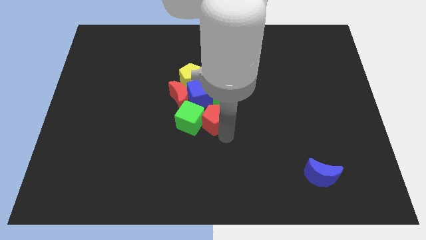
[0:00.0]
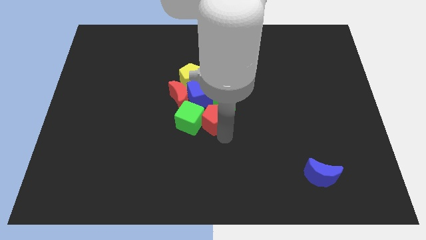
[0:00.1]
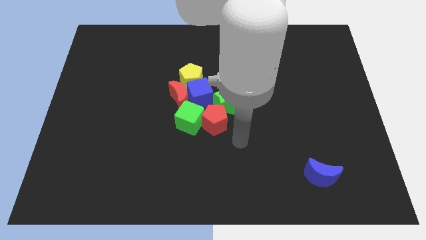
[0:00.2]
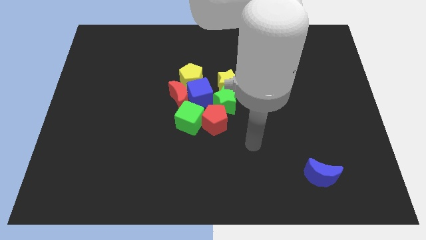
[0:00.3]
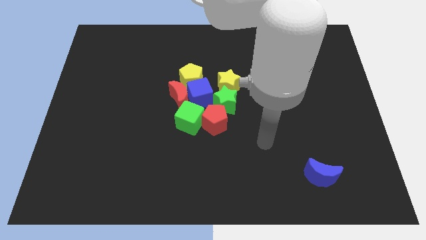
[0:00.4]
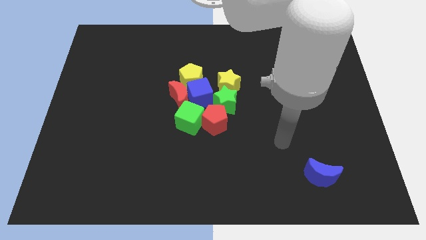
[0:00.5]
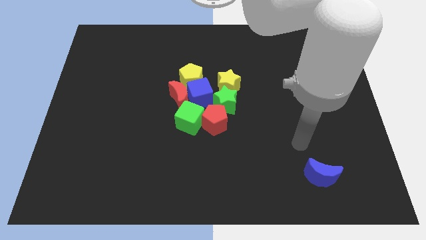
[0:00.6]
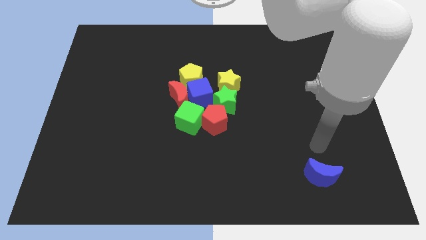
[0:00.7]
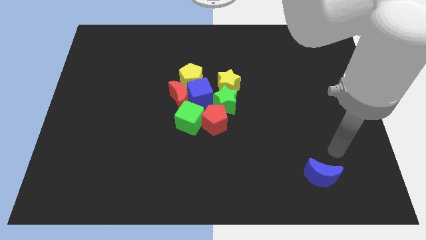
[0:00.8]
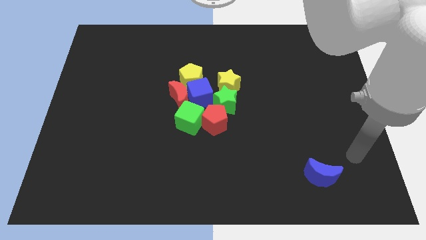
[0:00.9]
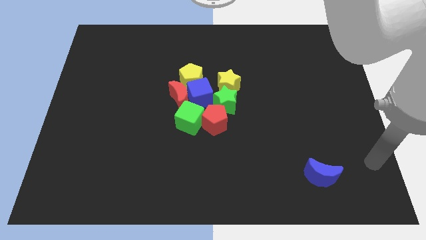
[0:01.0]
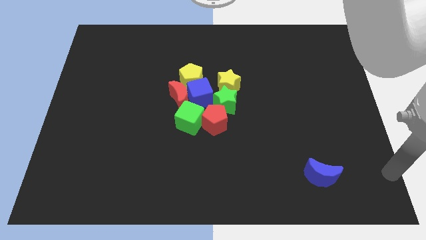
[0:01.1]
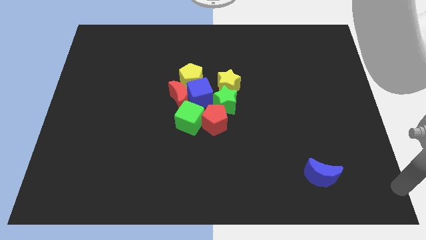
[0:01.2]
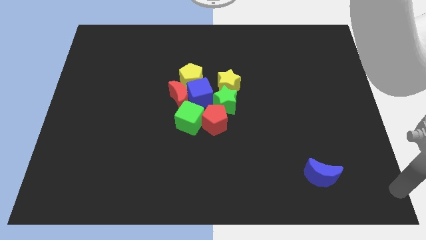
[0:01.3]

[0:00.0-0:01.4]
point your arm to the bottom right corner of the board

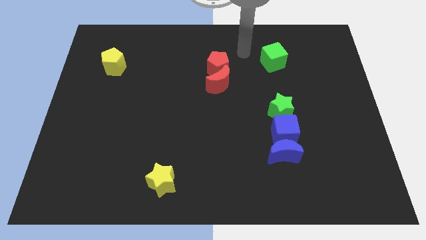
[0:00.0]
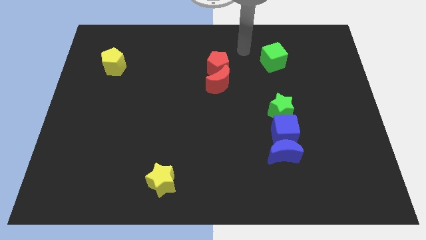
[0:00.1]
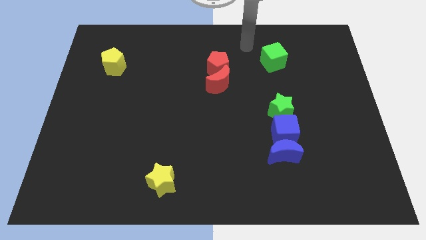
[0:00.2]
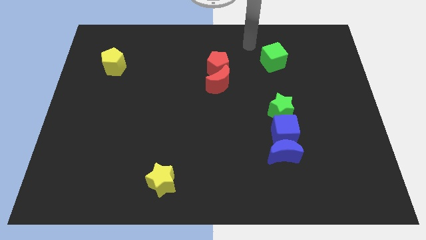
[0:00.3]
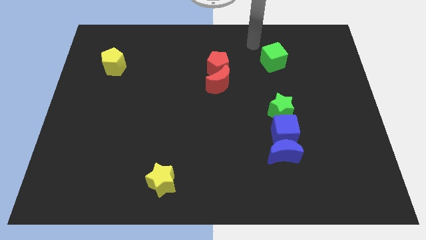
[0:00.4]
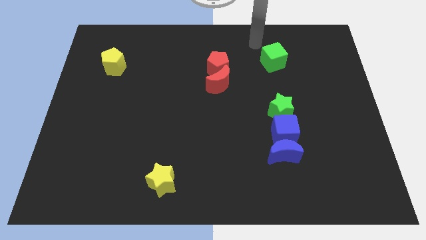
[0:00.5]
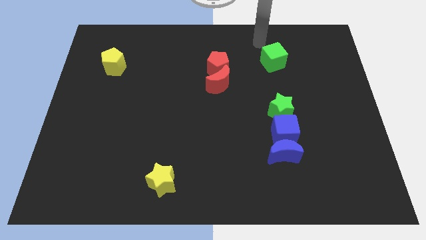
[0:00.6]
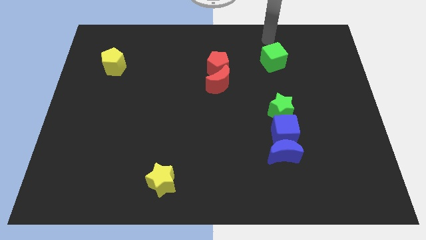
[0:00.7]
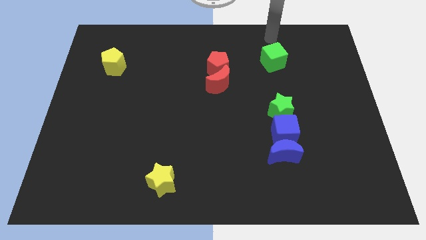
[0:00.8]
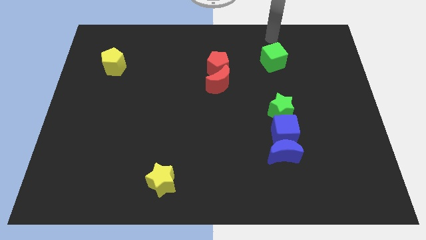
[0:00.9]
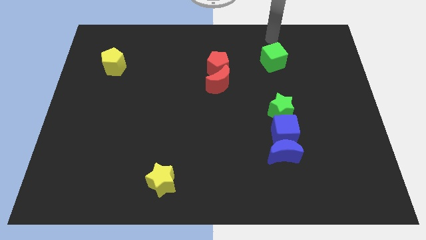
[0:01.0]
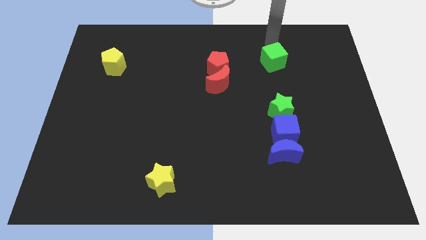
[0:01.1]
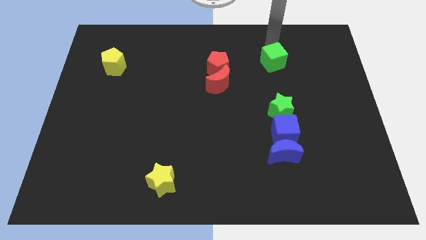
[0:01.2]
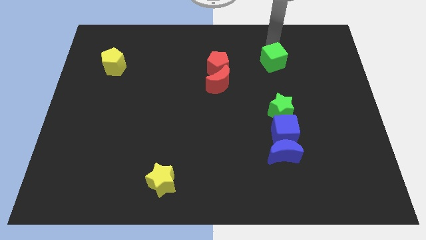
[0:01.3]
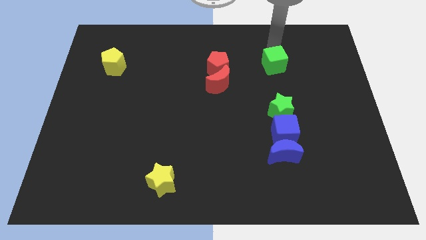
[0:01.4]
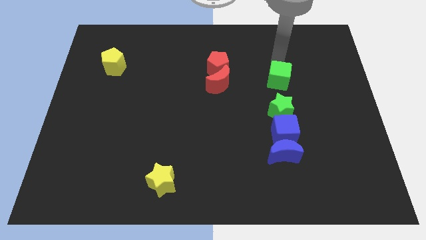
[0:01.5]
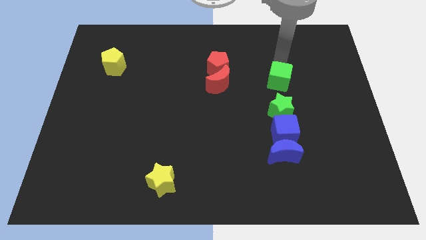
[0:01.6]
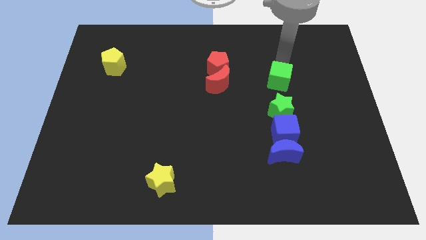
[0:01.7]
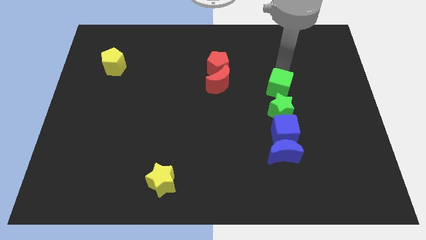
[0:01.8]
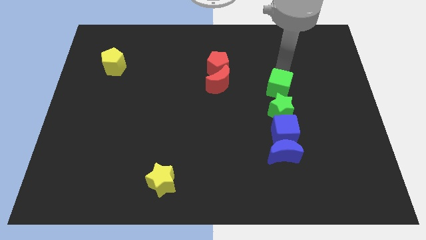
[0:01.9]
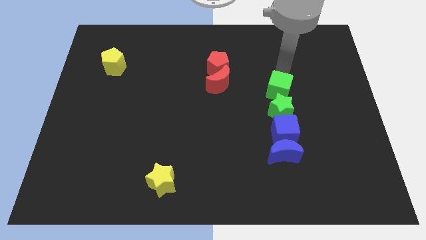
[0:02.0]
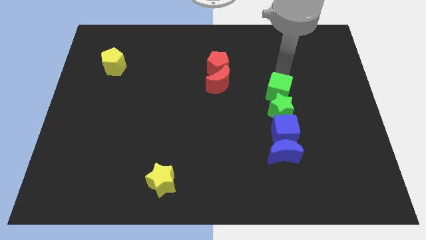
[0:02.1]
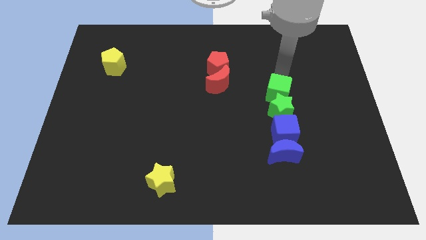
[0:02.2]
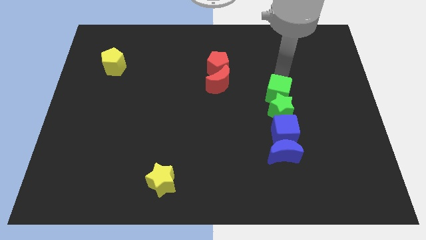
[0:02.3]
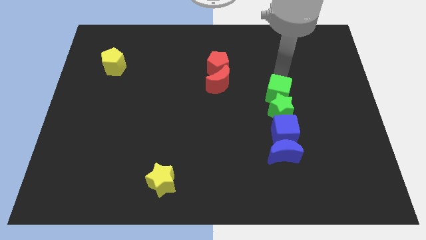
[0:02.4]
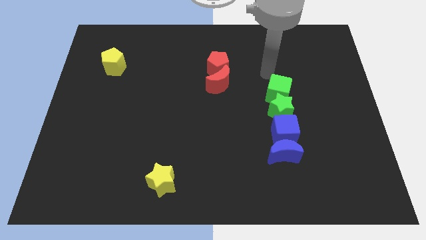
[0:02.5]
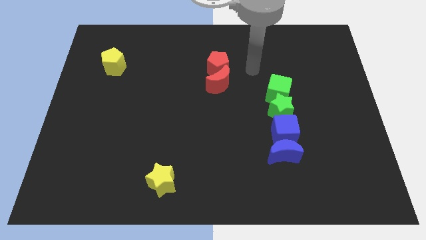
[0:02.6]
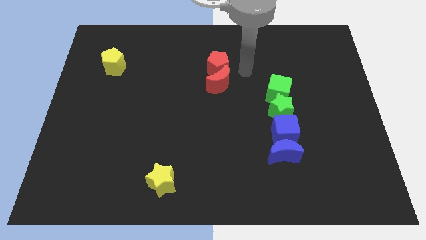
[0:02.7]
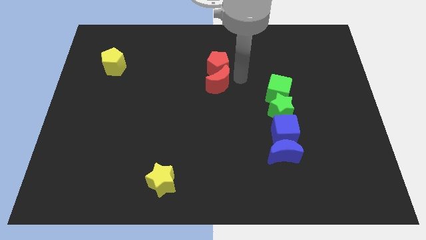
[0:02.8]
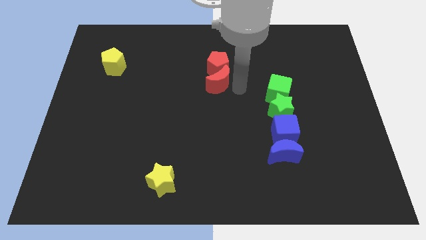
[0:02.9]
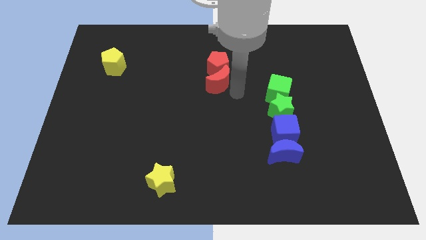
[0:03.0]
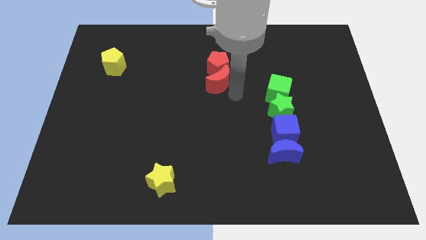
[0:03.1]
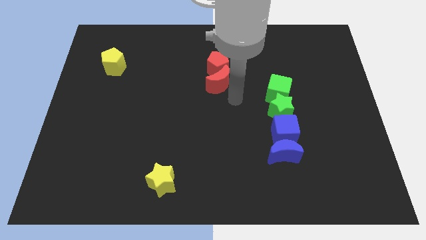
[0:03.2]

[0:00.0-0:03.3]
push the green cube at the top side of the green star

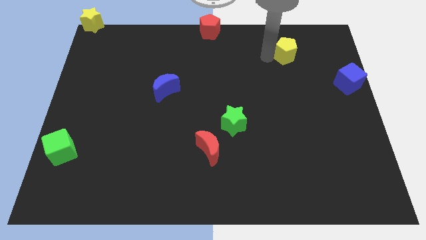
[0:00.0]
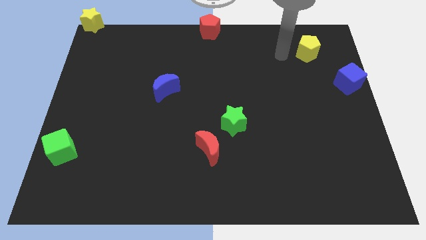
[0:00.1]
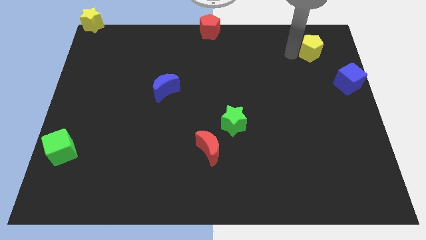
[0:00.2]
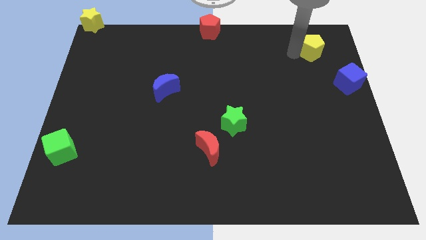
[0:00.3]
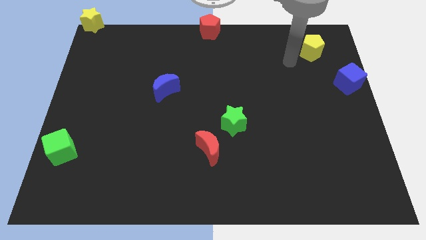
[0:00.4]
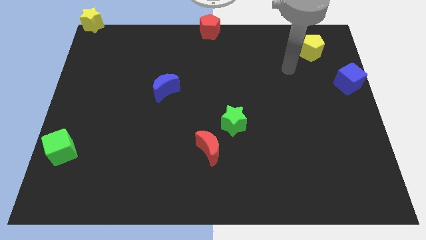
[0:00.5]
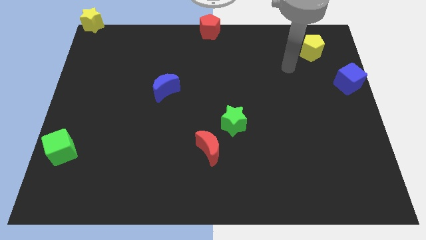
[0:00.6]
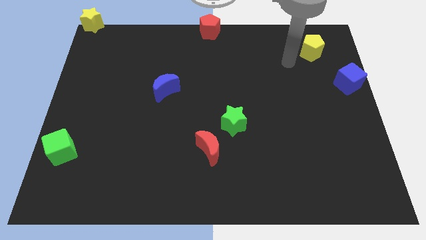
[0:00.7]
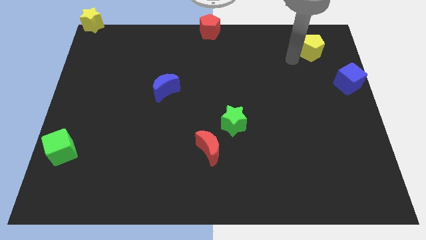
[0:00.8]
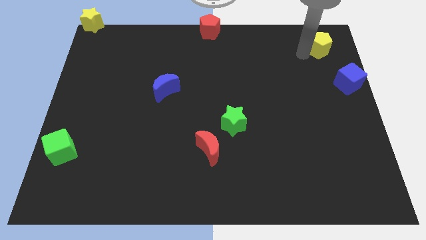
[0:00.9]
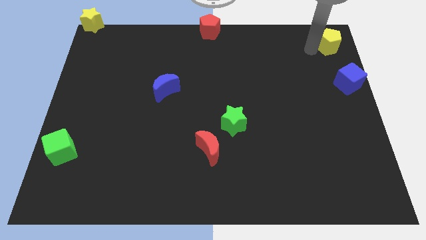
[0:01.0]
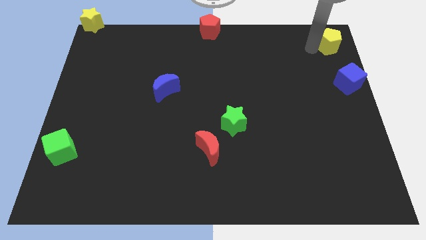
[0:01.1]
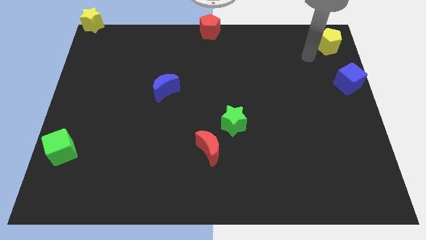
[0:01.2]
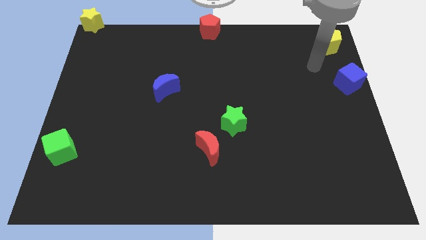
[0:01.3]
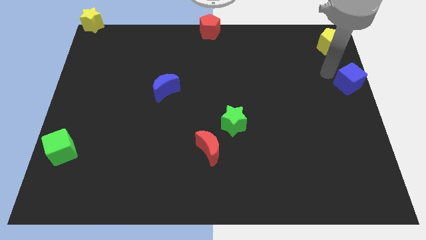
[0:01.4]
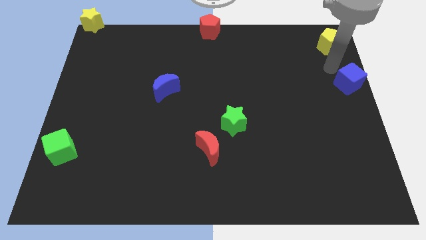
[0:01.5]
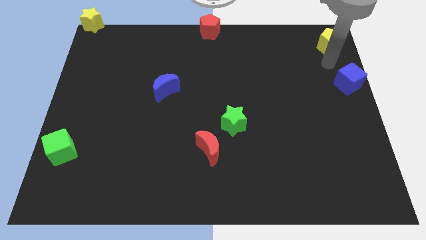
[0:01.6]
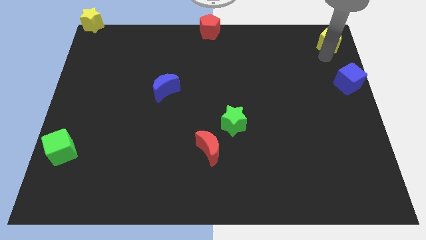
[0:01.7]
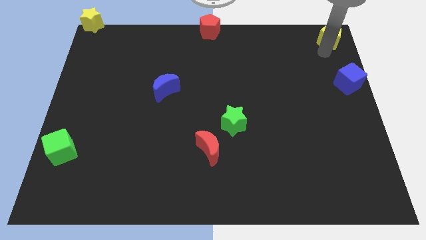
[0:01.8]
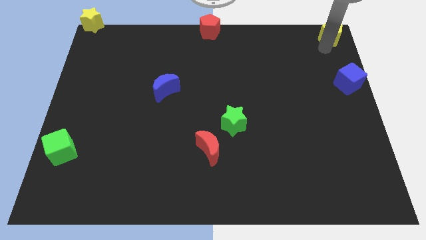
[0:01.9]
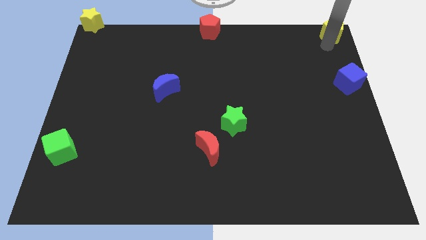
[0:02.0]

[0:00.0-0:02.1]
push yellow pentagon to the top right of the board

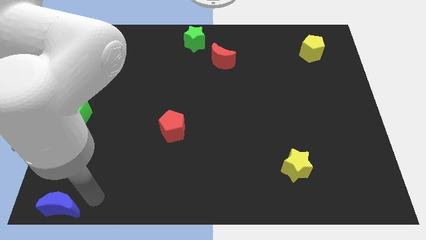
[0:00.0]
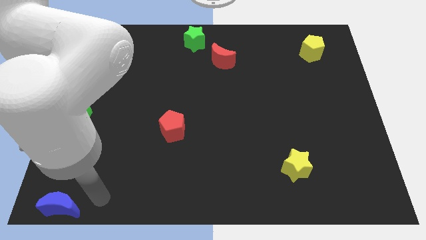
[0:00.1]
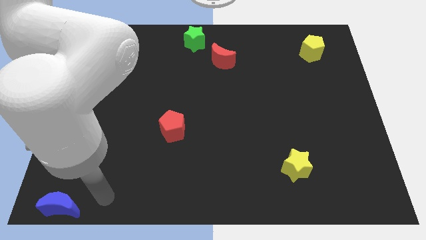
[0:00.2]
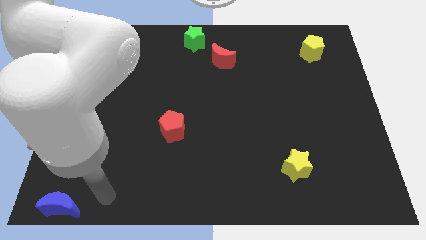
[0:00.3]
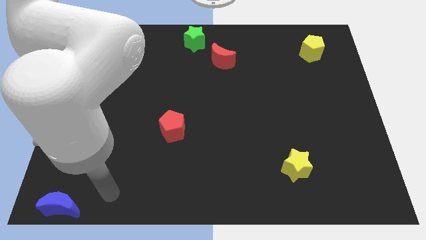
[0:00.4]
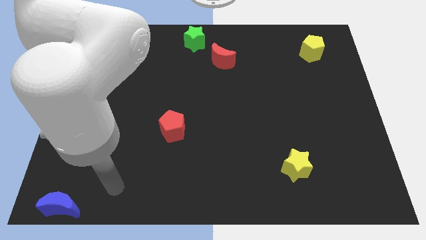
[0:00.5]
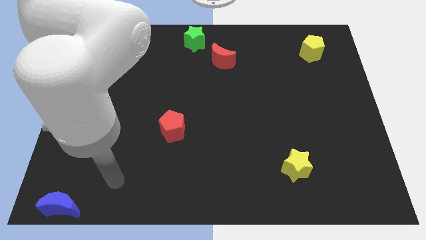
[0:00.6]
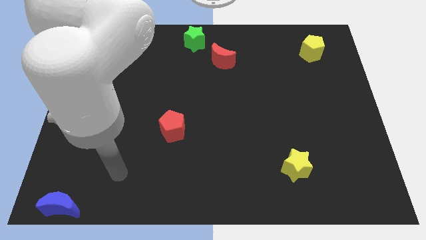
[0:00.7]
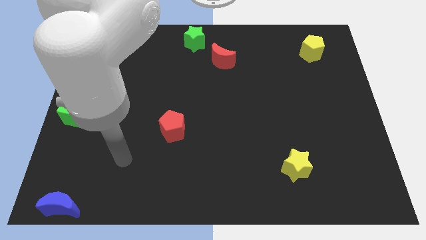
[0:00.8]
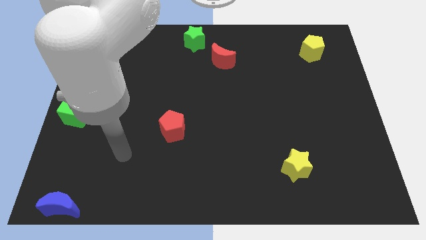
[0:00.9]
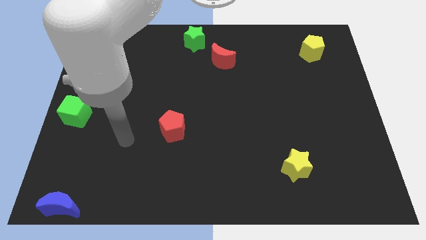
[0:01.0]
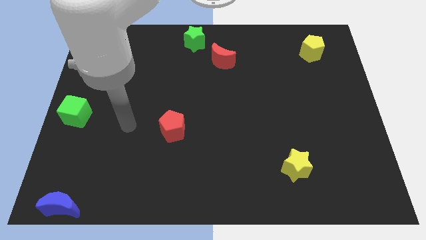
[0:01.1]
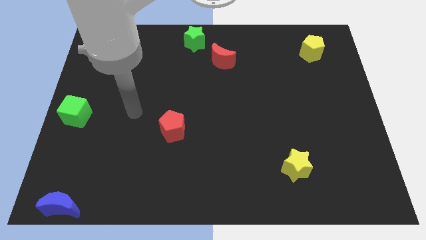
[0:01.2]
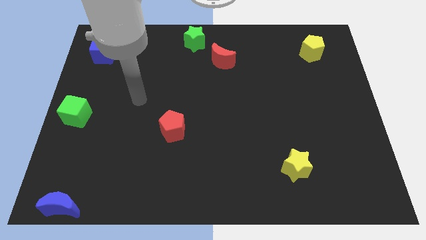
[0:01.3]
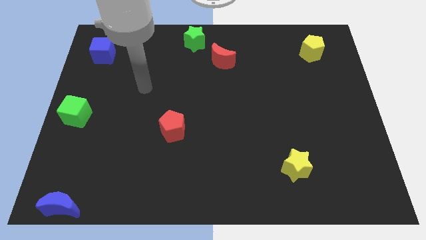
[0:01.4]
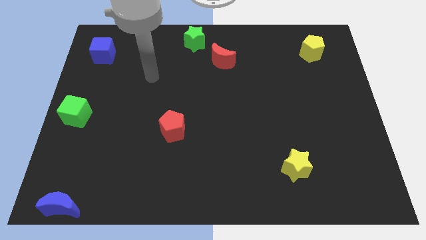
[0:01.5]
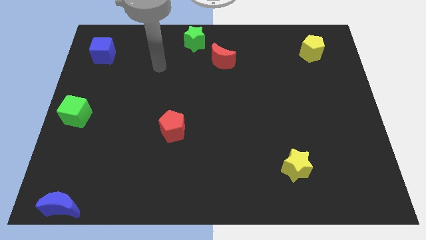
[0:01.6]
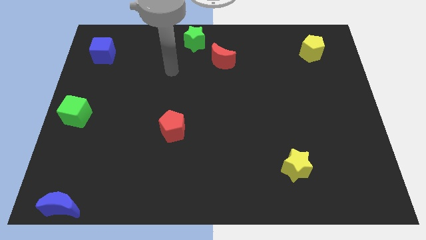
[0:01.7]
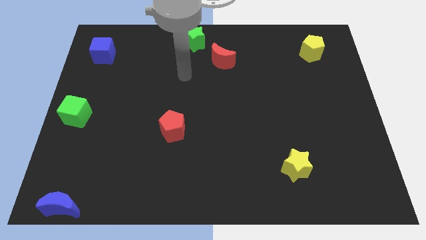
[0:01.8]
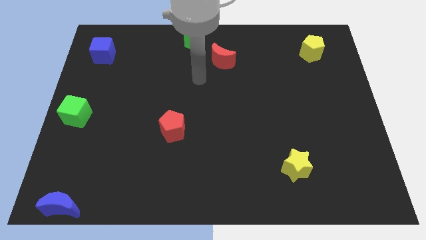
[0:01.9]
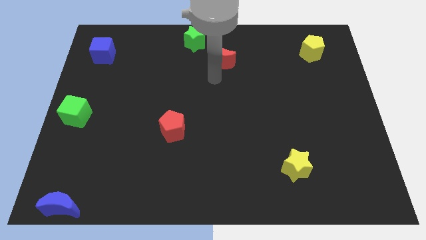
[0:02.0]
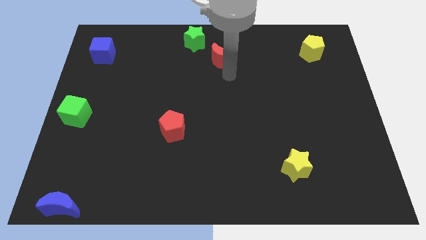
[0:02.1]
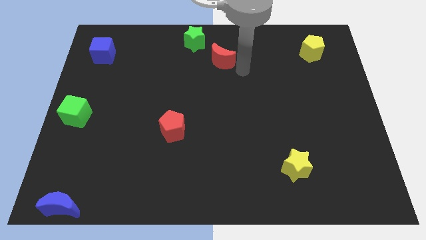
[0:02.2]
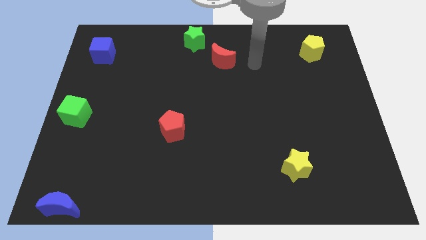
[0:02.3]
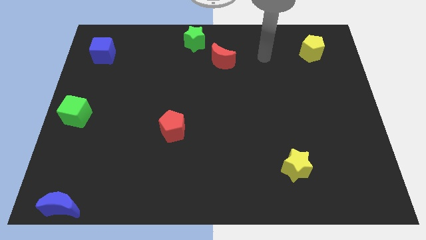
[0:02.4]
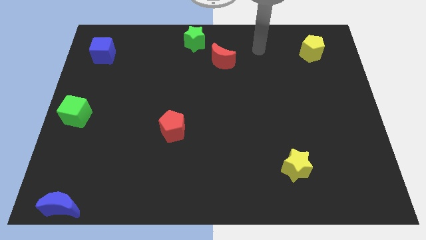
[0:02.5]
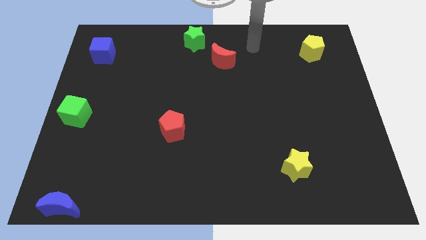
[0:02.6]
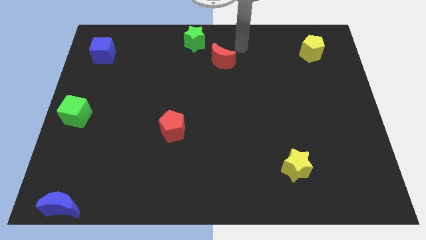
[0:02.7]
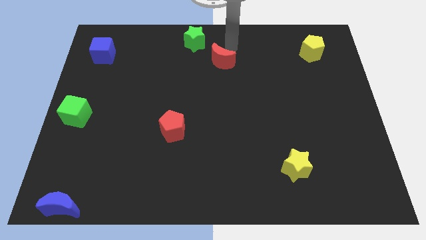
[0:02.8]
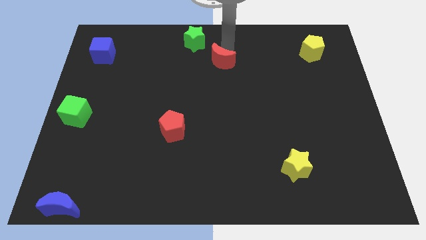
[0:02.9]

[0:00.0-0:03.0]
point your arm at the top side of the red crescent
